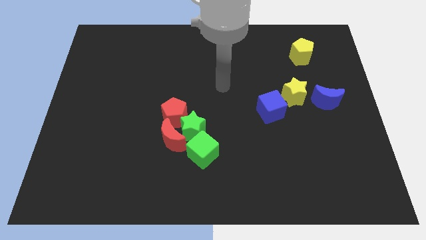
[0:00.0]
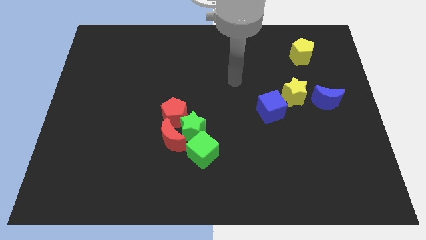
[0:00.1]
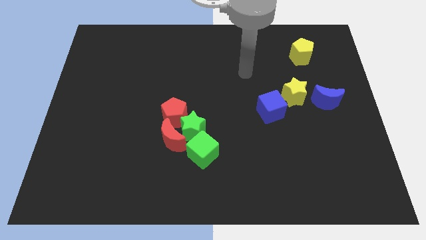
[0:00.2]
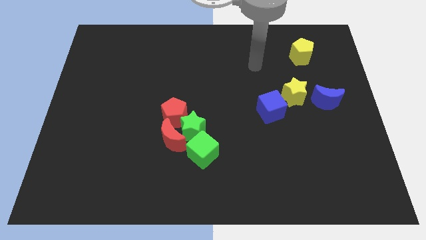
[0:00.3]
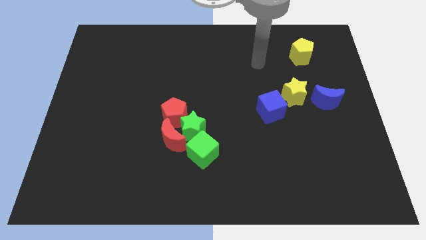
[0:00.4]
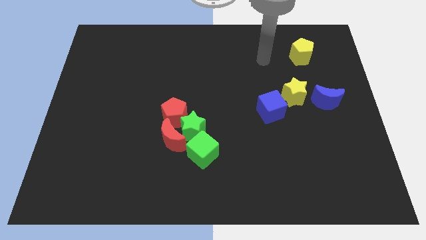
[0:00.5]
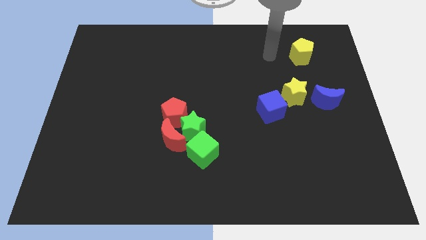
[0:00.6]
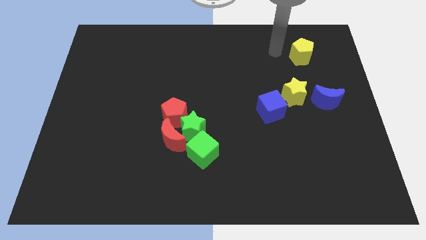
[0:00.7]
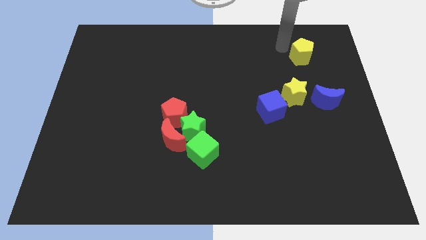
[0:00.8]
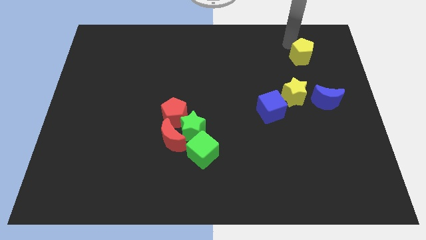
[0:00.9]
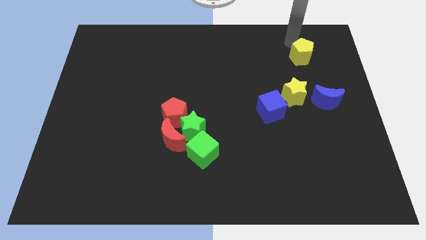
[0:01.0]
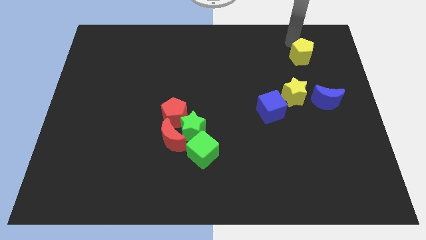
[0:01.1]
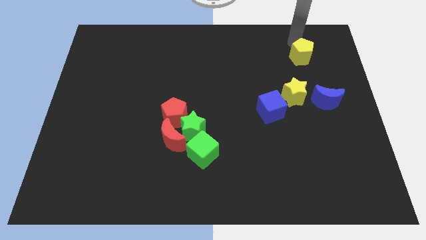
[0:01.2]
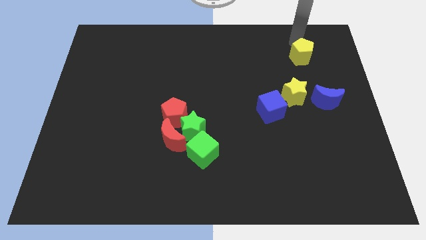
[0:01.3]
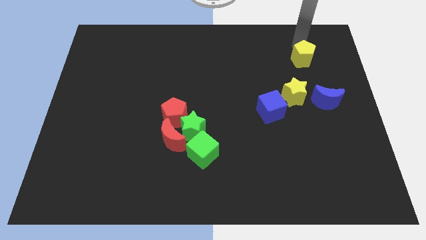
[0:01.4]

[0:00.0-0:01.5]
point your arm at the top of yellow pentagon

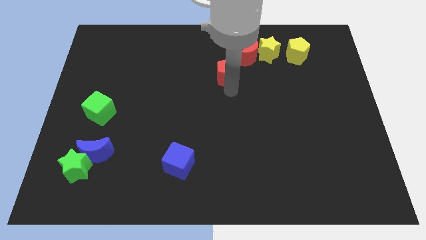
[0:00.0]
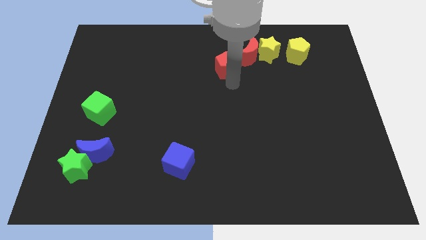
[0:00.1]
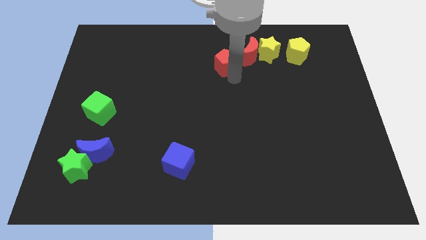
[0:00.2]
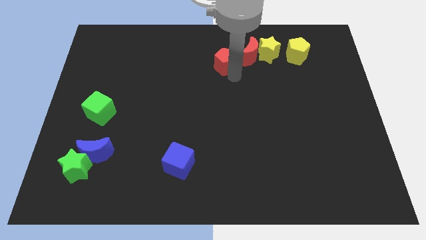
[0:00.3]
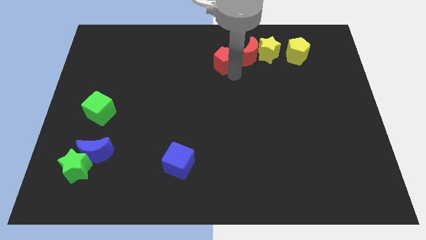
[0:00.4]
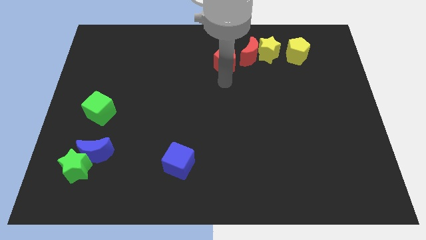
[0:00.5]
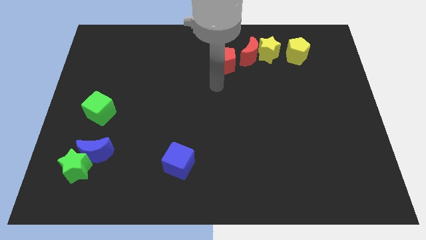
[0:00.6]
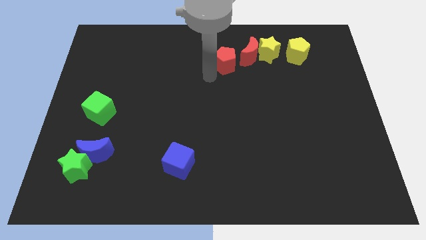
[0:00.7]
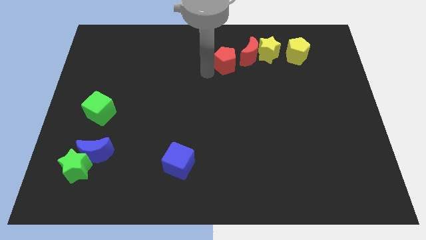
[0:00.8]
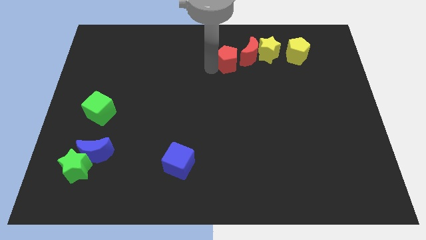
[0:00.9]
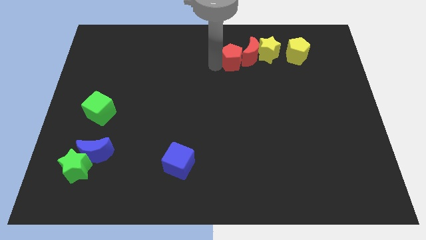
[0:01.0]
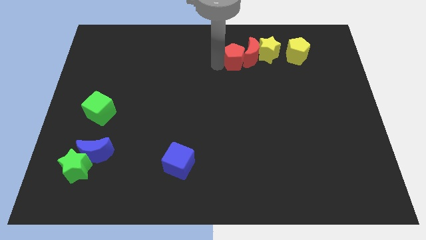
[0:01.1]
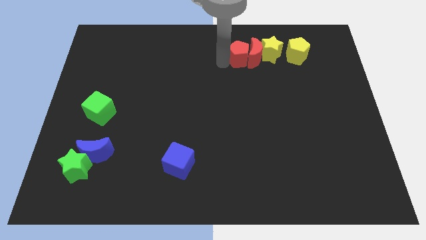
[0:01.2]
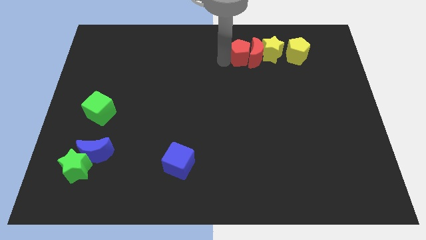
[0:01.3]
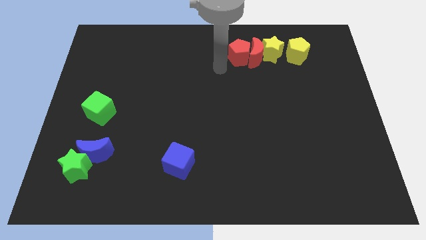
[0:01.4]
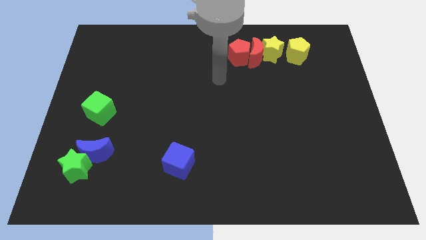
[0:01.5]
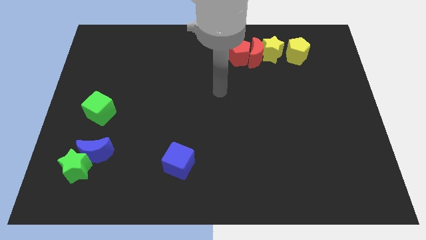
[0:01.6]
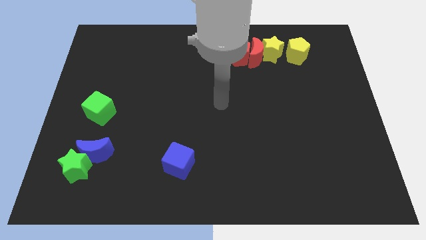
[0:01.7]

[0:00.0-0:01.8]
move the red pentagon into the left side of the red moon

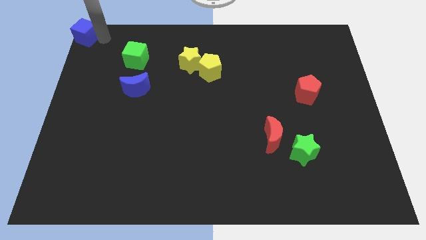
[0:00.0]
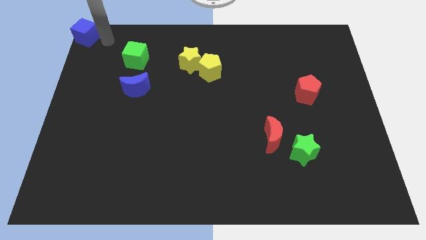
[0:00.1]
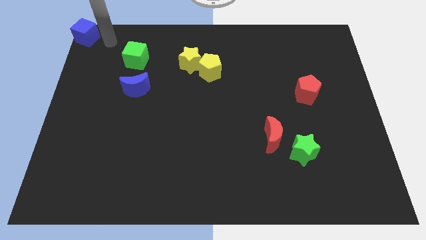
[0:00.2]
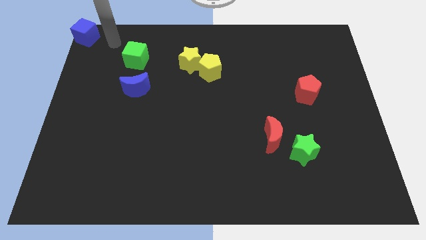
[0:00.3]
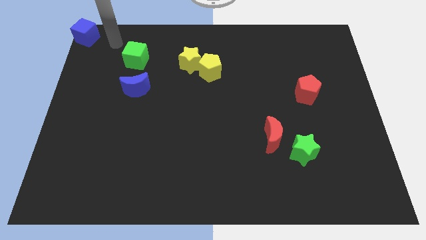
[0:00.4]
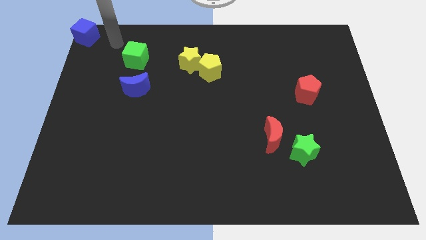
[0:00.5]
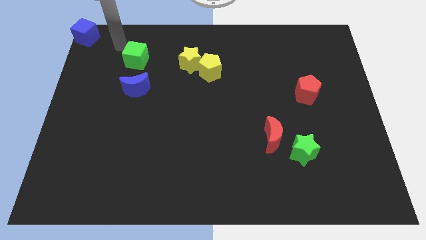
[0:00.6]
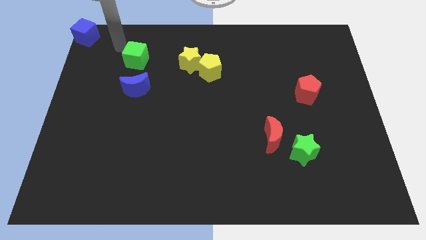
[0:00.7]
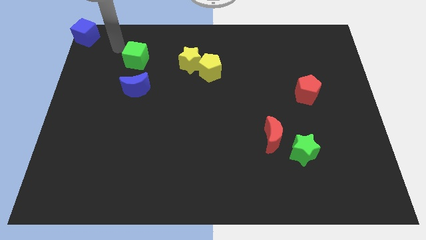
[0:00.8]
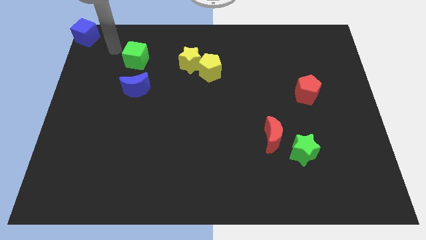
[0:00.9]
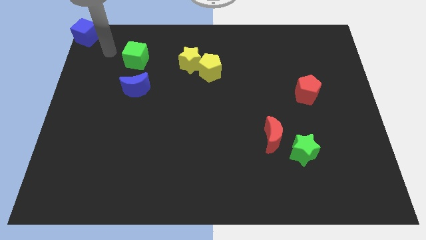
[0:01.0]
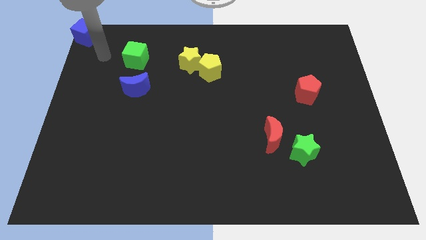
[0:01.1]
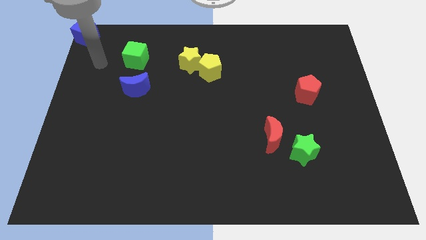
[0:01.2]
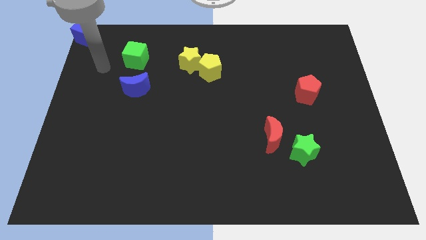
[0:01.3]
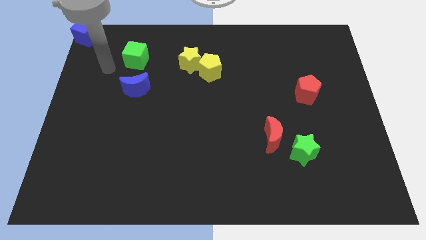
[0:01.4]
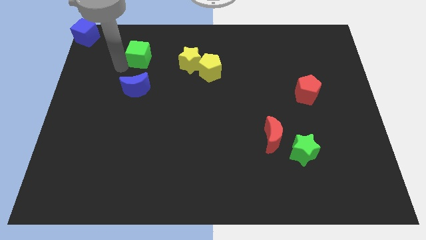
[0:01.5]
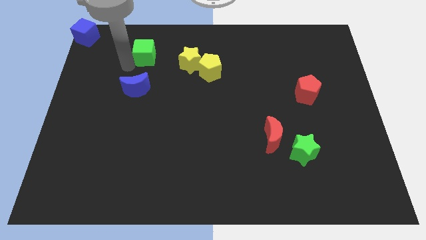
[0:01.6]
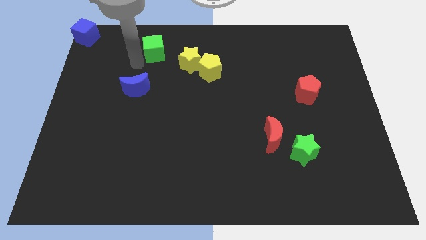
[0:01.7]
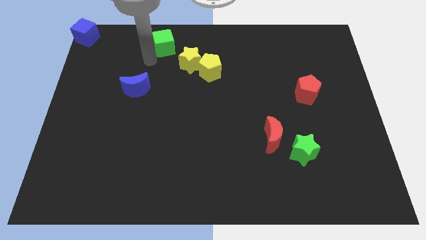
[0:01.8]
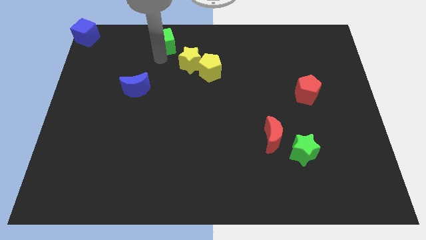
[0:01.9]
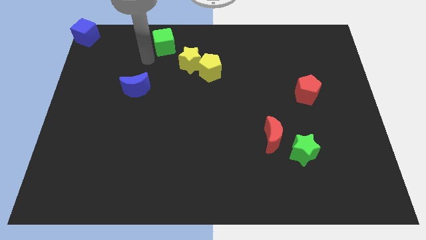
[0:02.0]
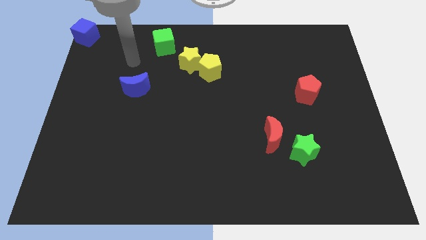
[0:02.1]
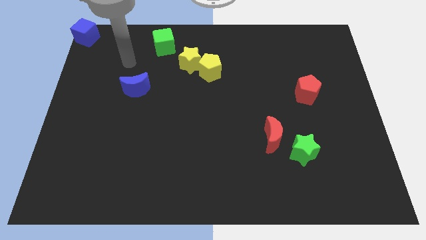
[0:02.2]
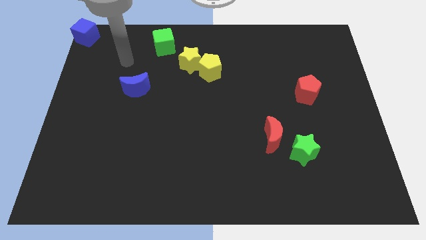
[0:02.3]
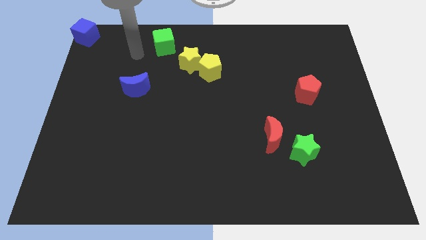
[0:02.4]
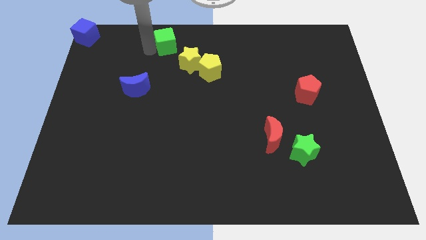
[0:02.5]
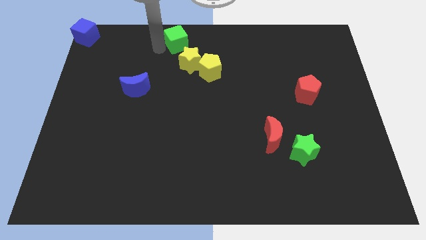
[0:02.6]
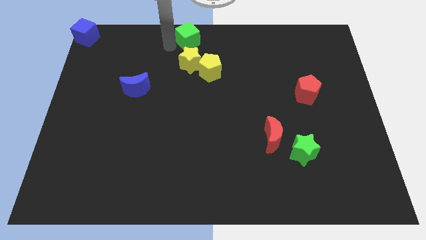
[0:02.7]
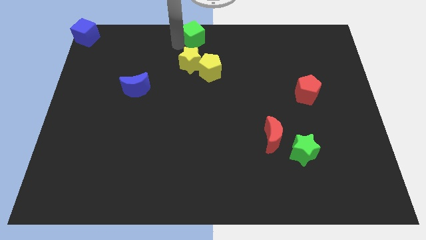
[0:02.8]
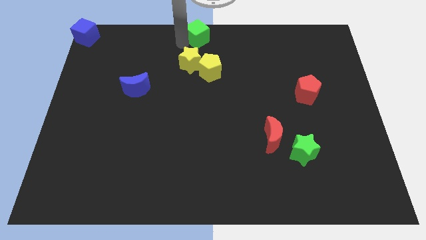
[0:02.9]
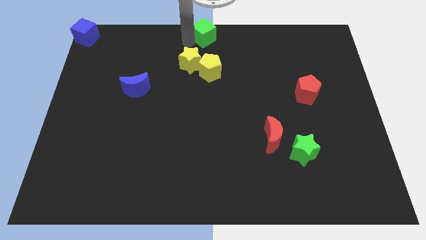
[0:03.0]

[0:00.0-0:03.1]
slide the green cube to the top side of the yellow star

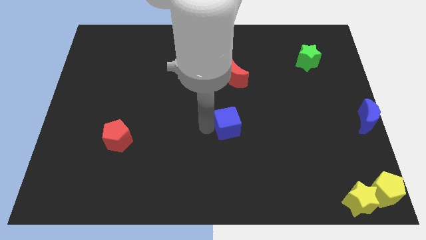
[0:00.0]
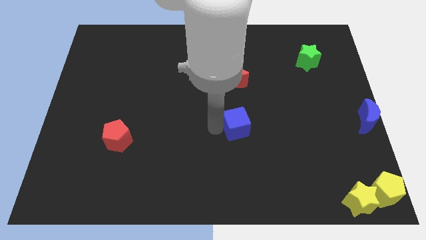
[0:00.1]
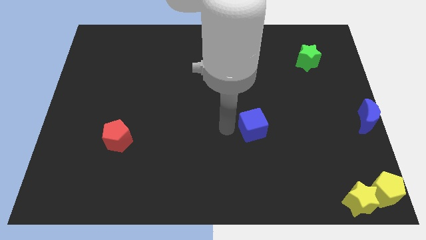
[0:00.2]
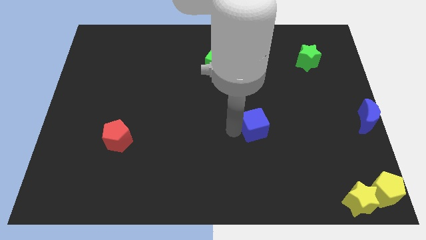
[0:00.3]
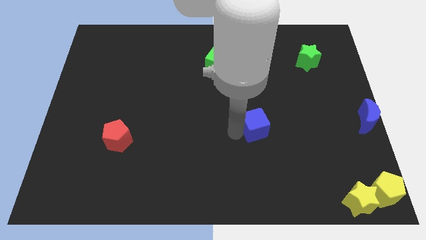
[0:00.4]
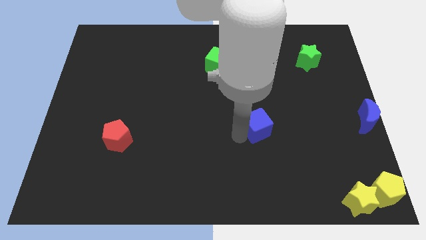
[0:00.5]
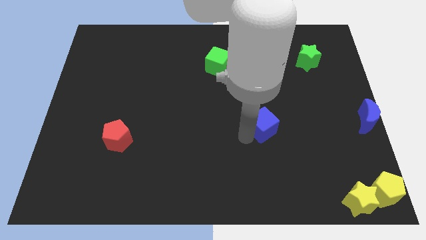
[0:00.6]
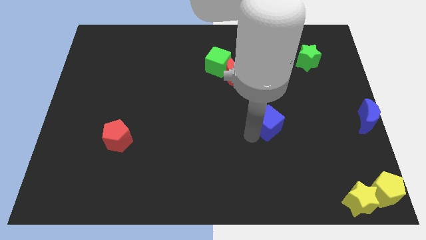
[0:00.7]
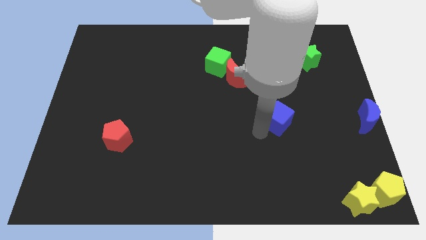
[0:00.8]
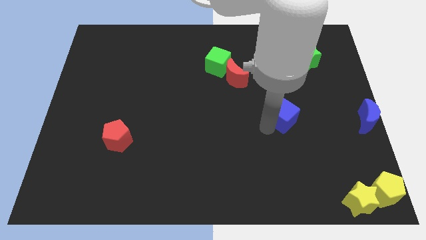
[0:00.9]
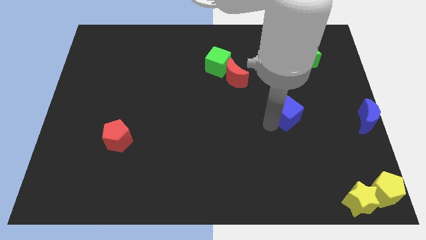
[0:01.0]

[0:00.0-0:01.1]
place the blue cube to the bottom right of the red crescent

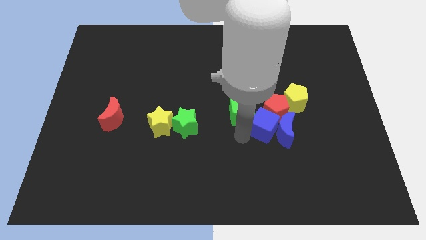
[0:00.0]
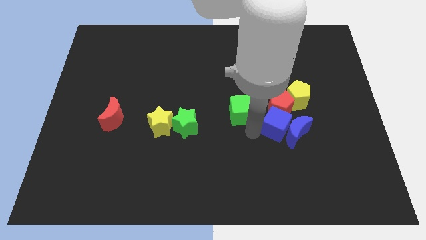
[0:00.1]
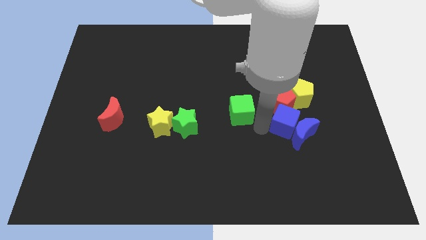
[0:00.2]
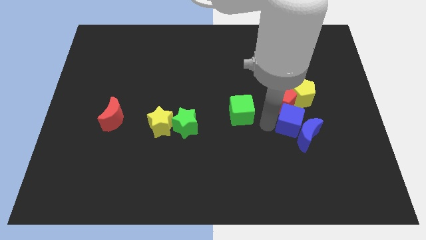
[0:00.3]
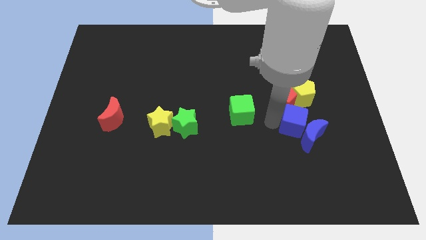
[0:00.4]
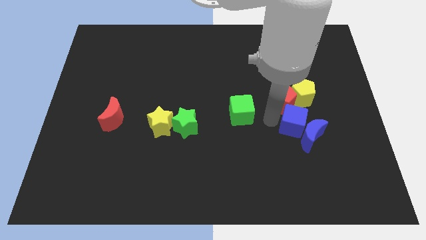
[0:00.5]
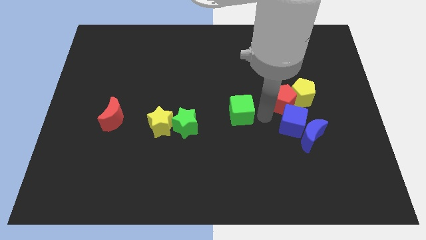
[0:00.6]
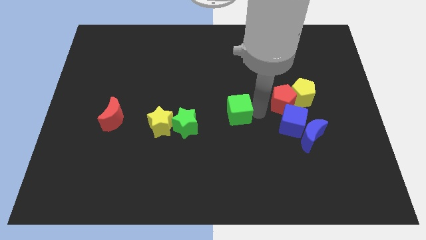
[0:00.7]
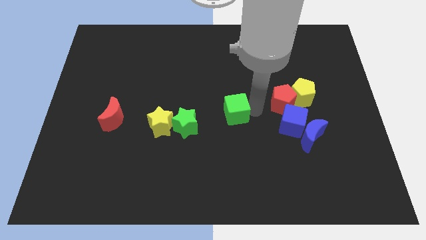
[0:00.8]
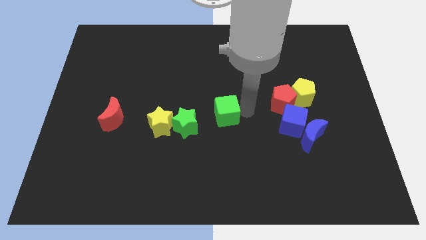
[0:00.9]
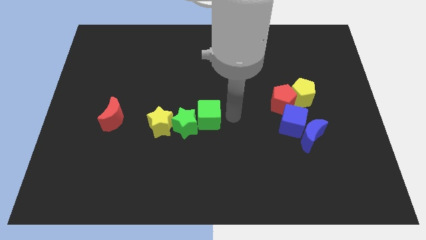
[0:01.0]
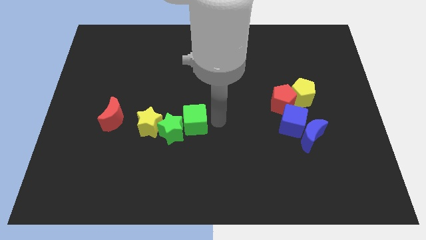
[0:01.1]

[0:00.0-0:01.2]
move green cube into green star
